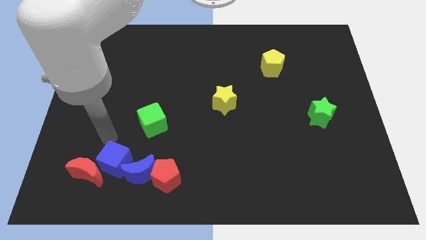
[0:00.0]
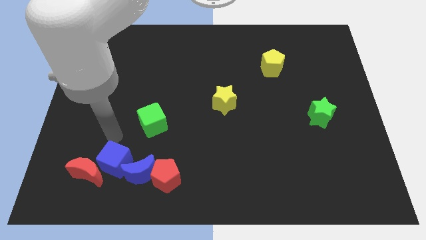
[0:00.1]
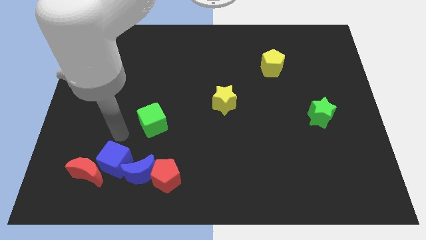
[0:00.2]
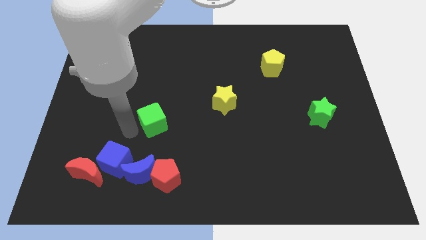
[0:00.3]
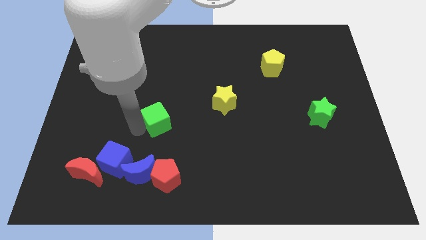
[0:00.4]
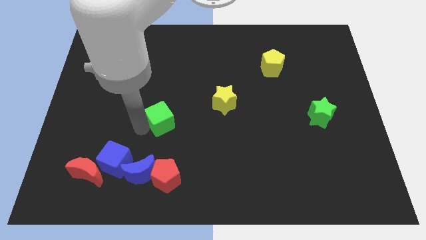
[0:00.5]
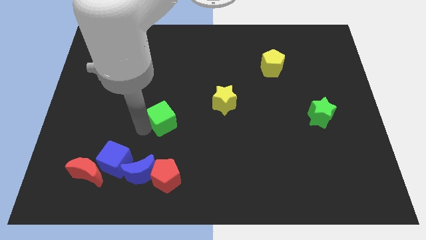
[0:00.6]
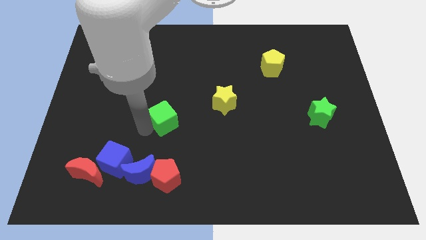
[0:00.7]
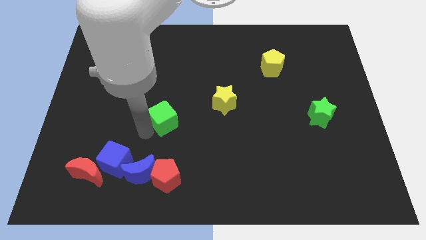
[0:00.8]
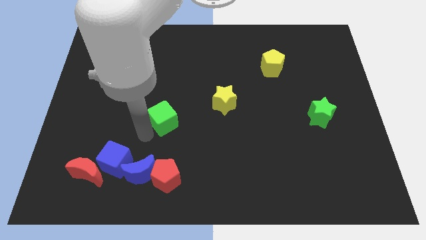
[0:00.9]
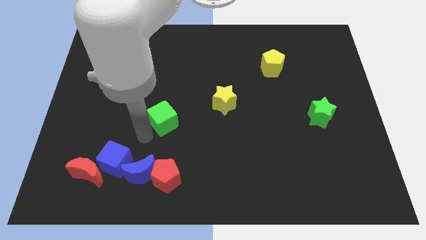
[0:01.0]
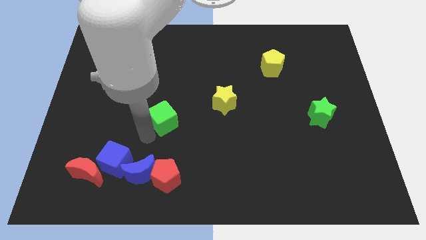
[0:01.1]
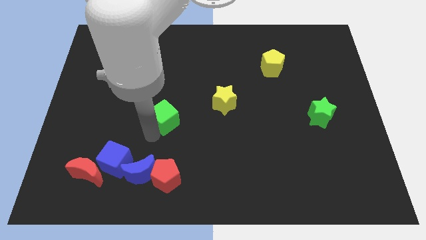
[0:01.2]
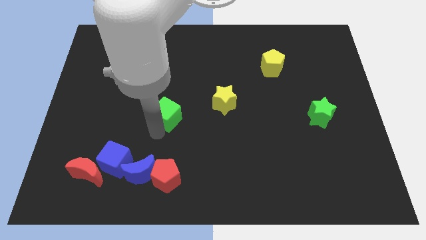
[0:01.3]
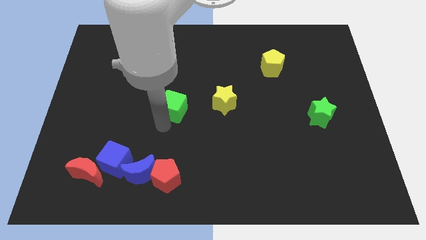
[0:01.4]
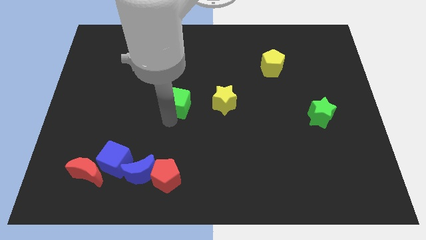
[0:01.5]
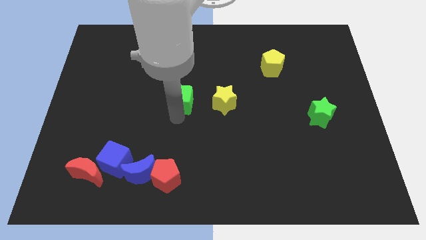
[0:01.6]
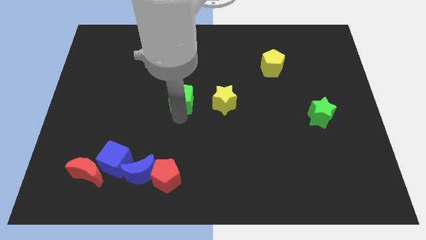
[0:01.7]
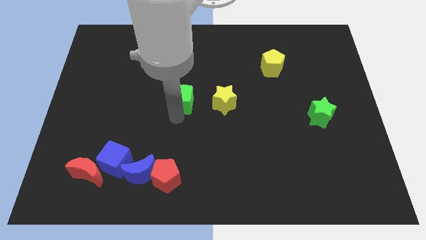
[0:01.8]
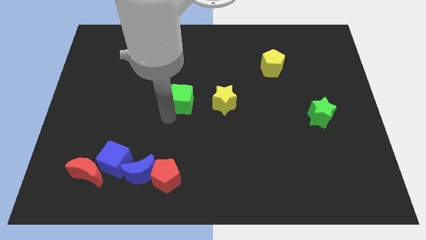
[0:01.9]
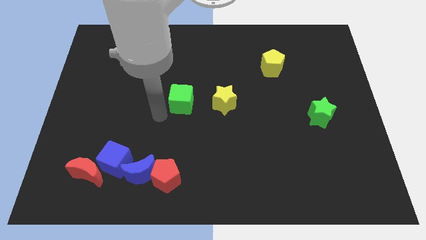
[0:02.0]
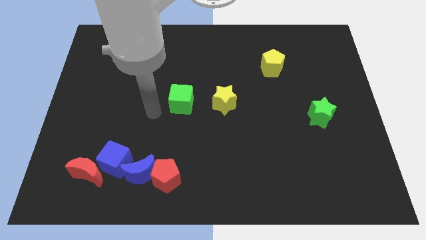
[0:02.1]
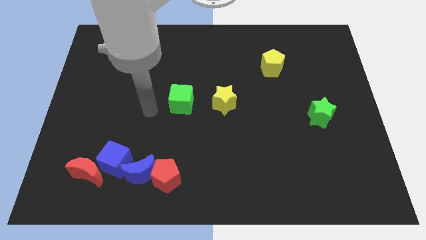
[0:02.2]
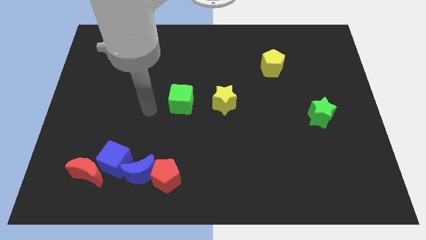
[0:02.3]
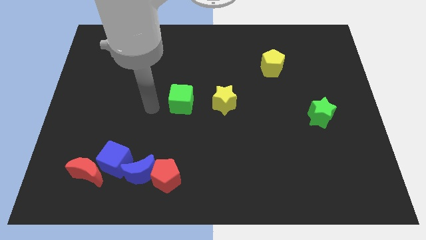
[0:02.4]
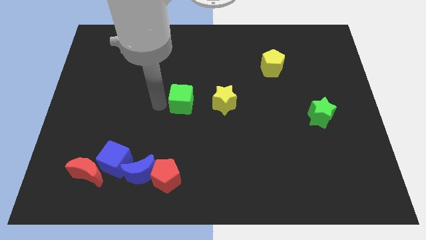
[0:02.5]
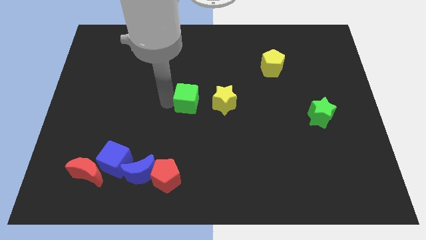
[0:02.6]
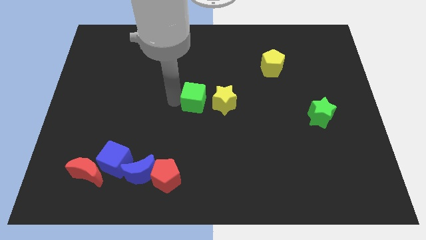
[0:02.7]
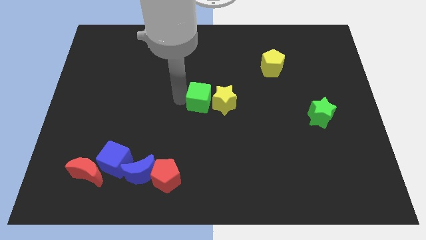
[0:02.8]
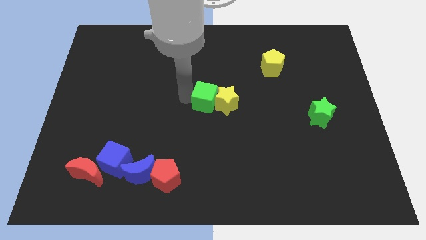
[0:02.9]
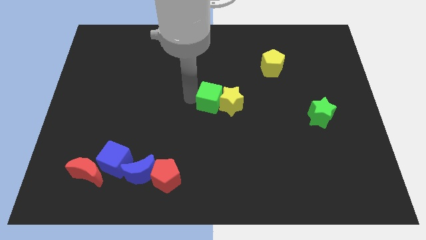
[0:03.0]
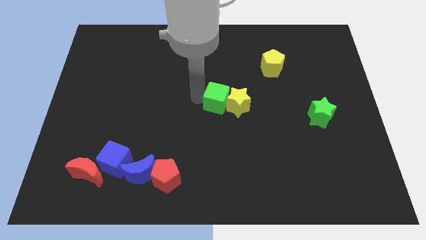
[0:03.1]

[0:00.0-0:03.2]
push the green cube into the yellow star

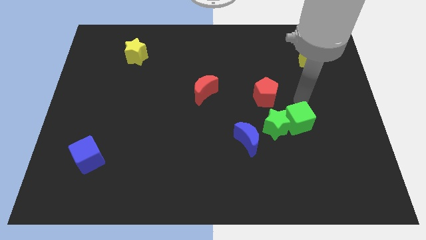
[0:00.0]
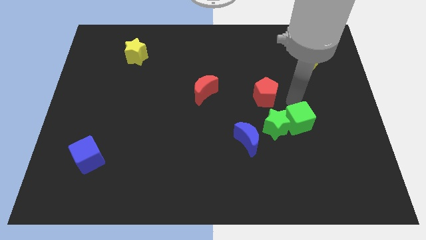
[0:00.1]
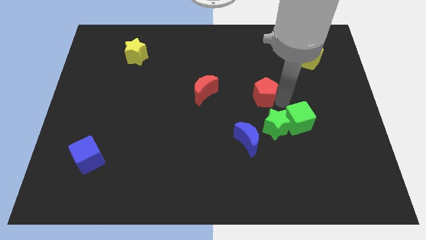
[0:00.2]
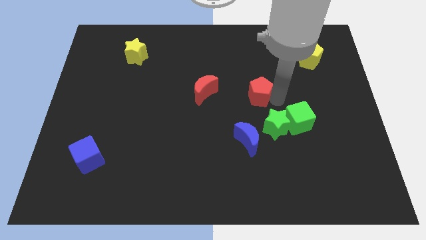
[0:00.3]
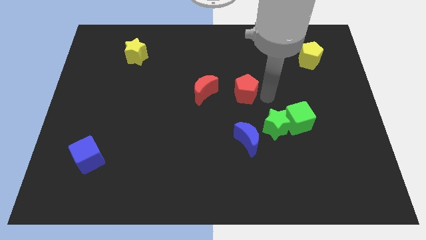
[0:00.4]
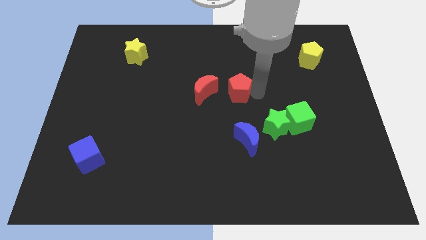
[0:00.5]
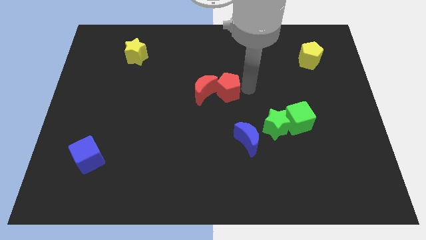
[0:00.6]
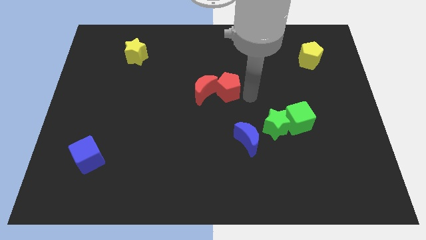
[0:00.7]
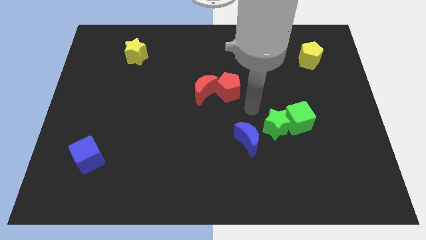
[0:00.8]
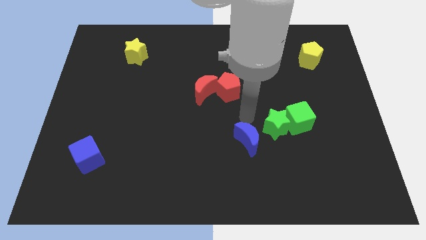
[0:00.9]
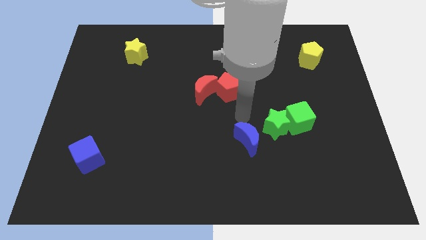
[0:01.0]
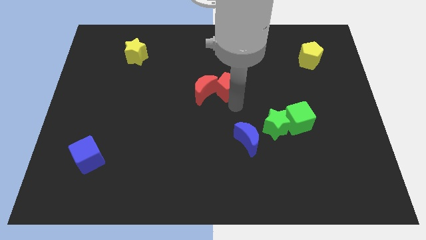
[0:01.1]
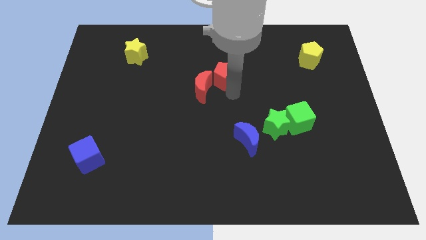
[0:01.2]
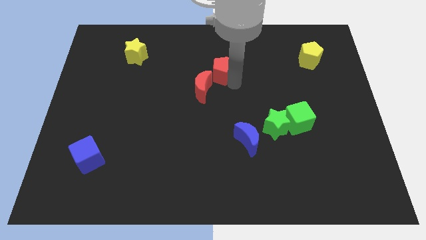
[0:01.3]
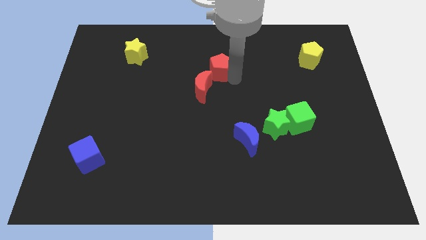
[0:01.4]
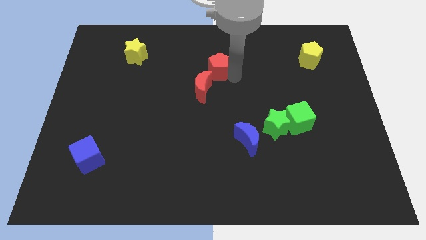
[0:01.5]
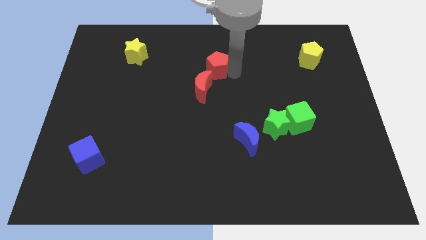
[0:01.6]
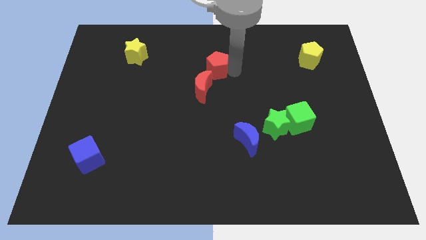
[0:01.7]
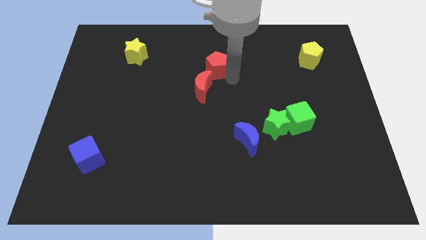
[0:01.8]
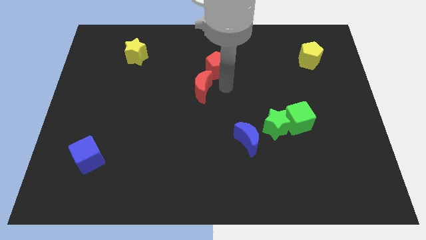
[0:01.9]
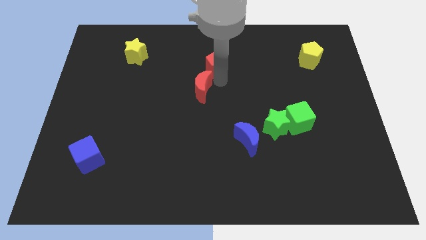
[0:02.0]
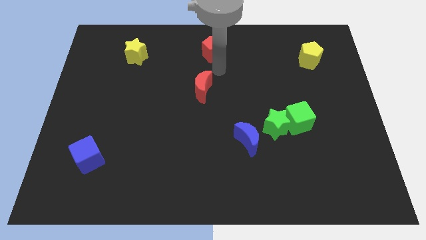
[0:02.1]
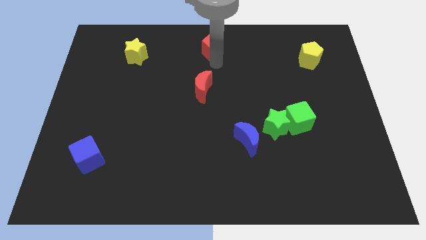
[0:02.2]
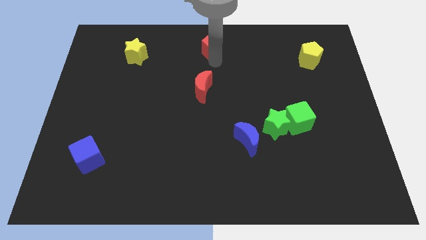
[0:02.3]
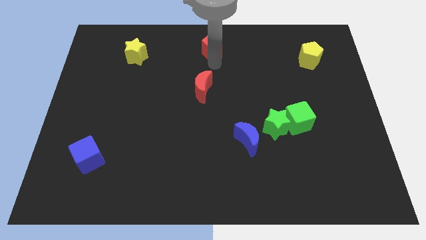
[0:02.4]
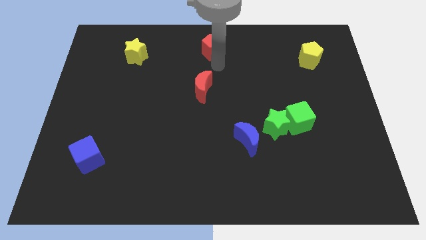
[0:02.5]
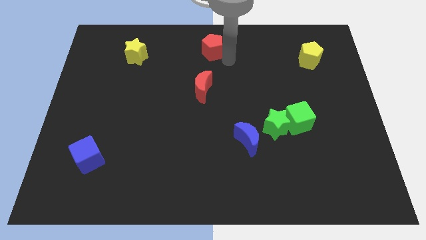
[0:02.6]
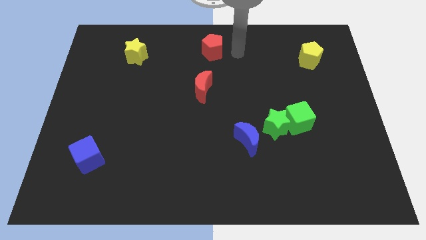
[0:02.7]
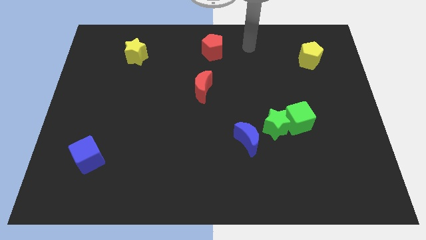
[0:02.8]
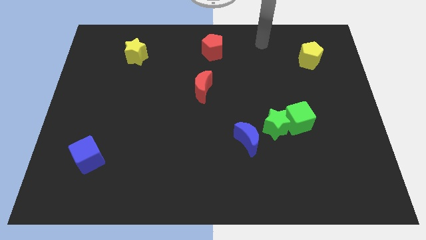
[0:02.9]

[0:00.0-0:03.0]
place the red pentagon vertically above the red moon

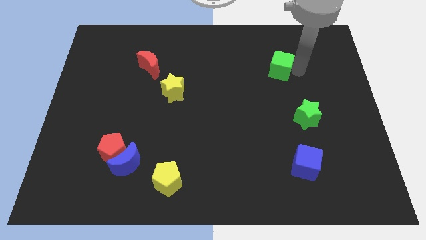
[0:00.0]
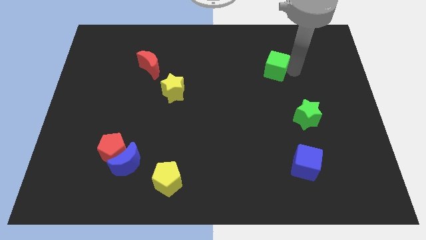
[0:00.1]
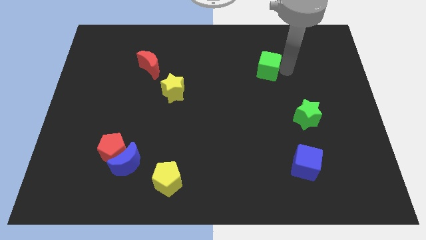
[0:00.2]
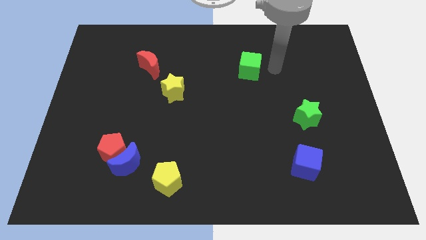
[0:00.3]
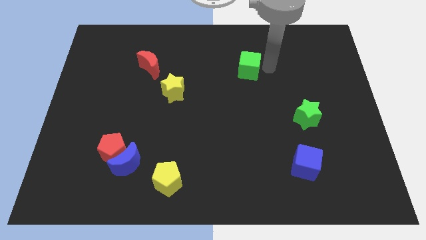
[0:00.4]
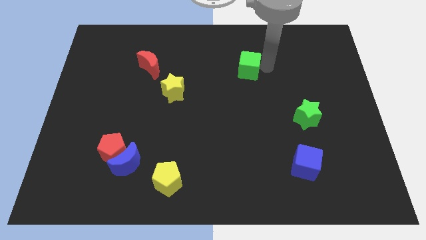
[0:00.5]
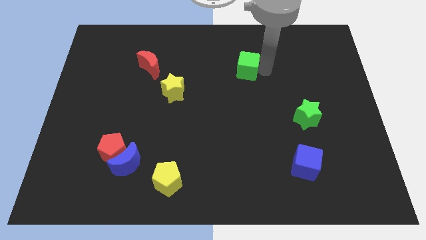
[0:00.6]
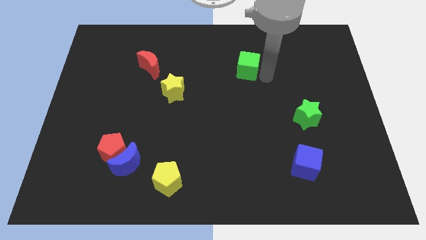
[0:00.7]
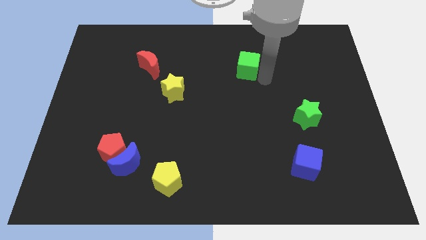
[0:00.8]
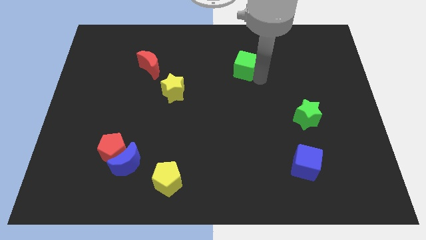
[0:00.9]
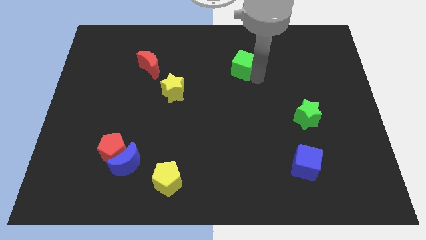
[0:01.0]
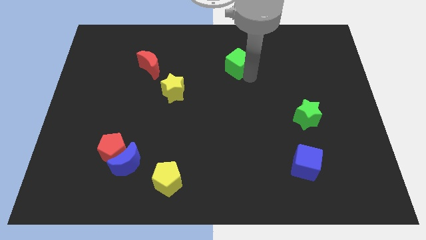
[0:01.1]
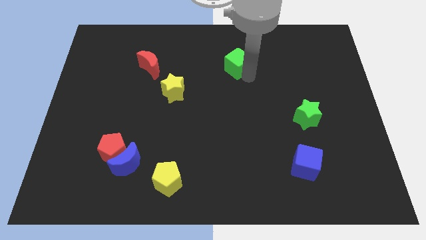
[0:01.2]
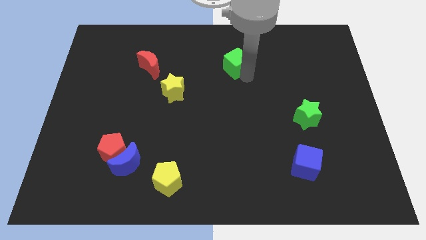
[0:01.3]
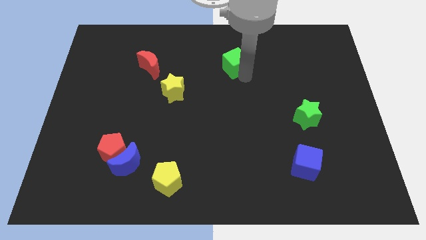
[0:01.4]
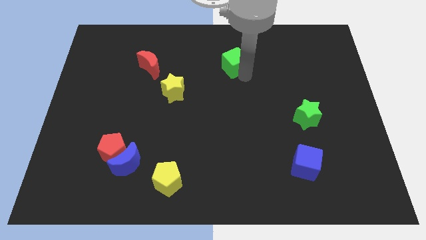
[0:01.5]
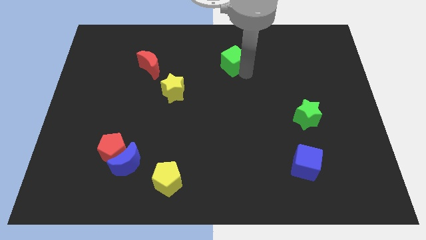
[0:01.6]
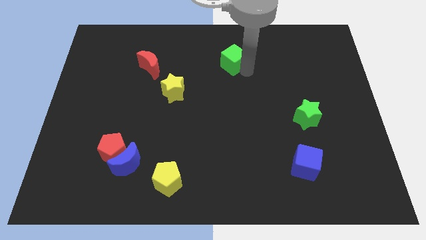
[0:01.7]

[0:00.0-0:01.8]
move green cube towards the top of the board

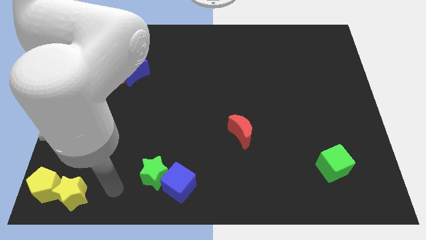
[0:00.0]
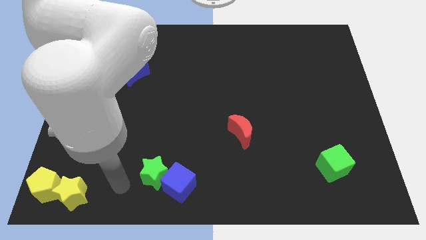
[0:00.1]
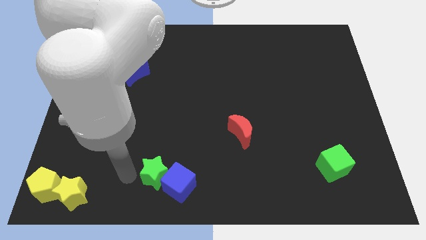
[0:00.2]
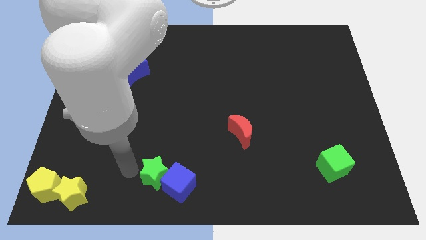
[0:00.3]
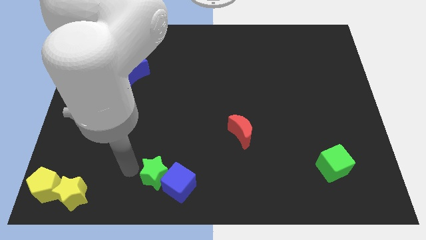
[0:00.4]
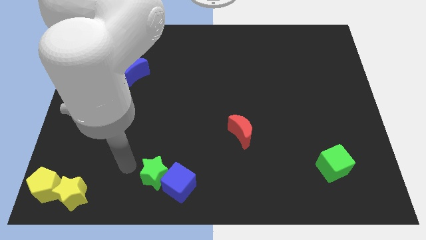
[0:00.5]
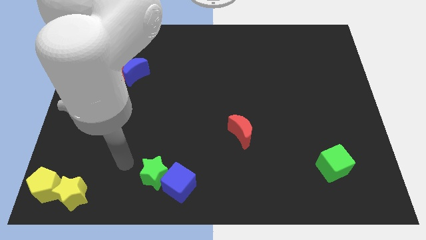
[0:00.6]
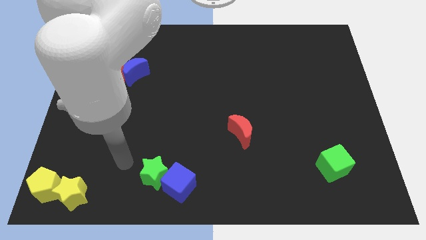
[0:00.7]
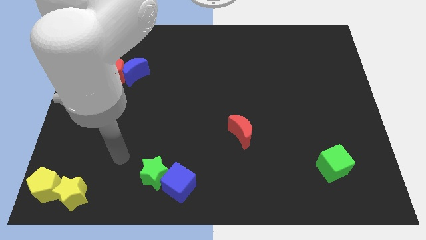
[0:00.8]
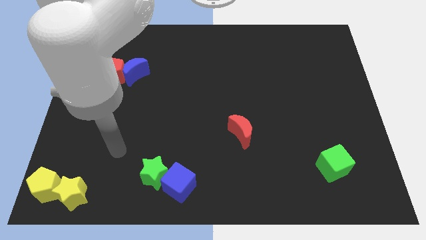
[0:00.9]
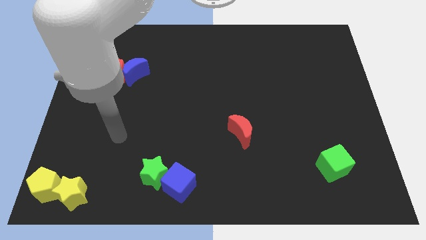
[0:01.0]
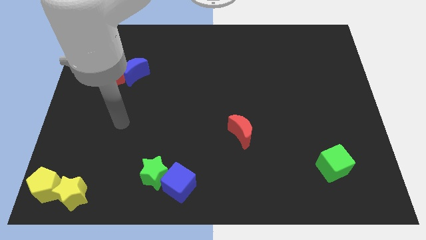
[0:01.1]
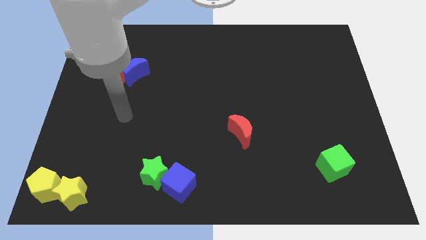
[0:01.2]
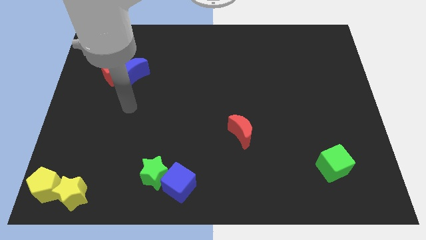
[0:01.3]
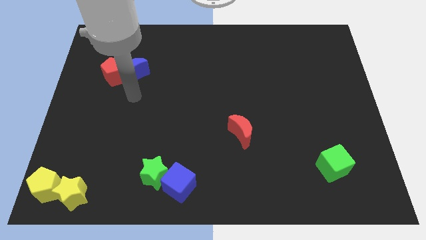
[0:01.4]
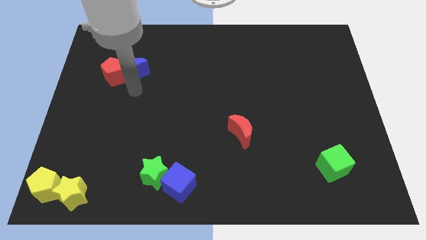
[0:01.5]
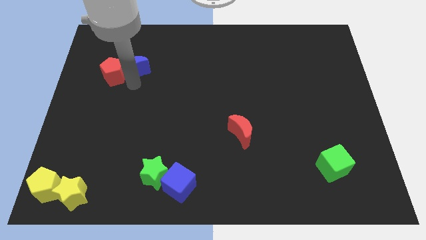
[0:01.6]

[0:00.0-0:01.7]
move yourself close to the blue moon
